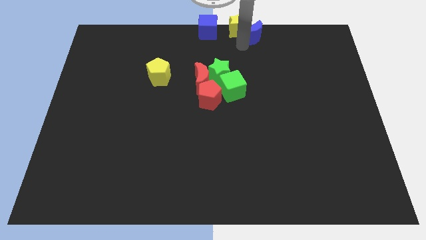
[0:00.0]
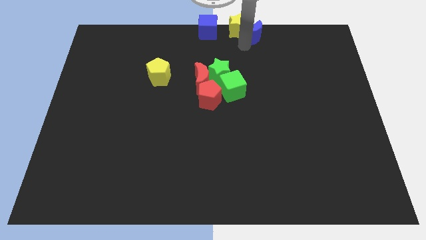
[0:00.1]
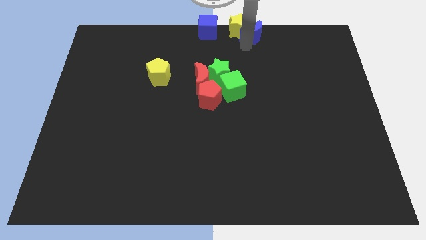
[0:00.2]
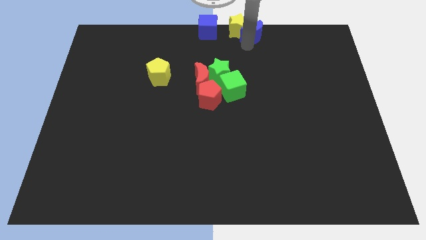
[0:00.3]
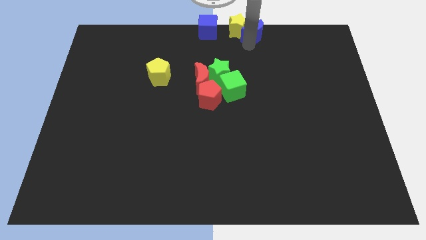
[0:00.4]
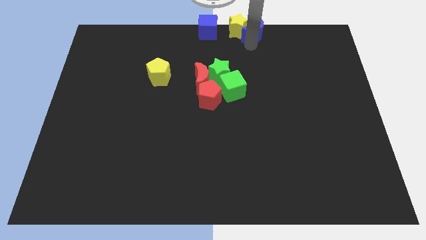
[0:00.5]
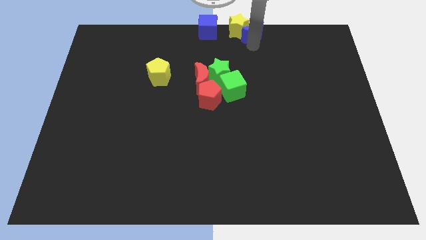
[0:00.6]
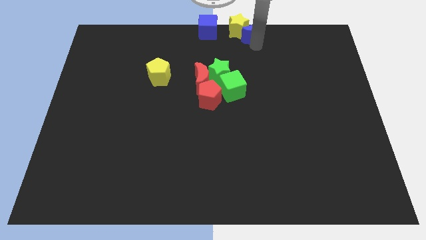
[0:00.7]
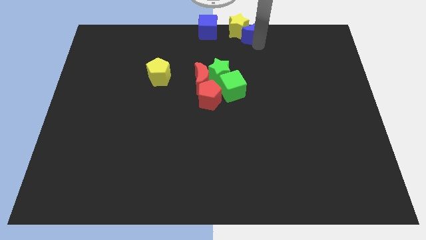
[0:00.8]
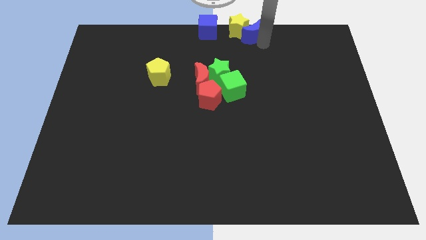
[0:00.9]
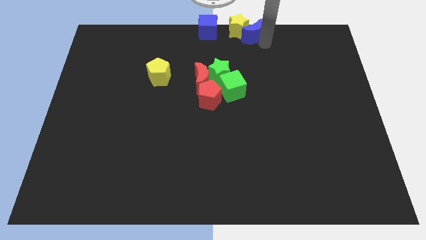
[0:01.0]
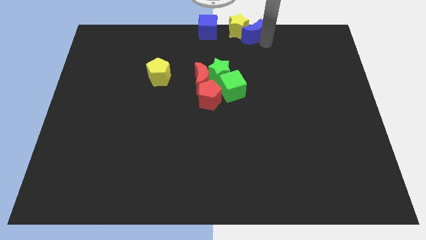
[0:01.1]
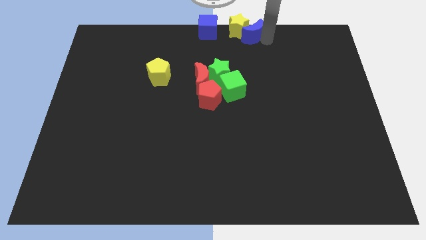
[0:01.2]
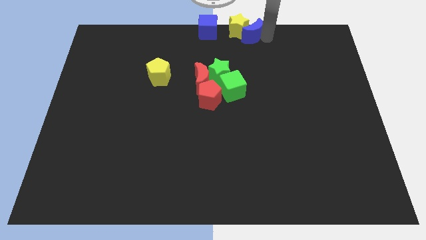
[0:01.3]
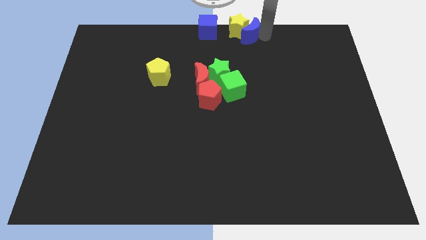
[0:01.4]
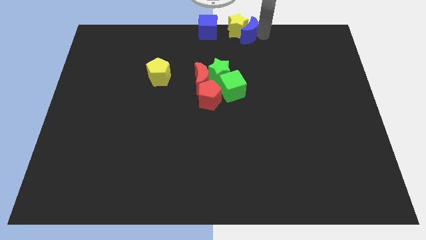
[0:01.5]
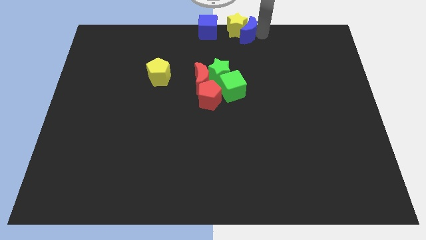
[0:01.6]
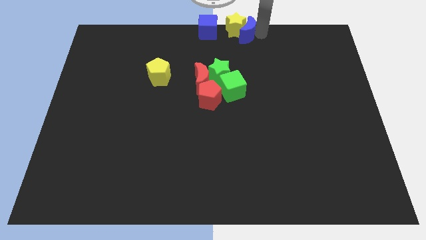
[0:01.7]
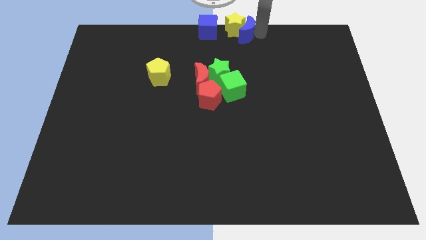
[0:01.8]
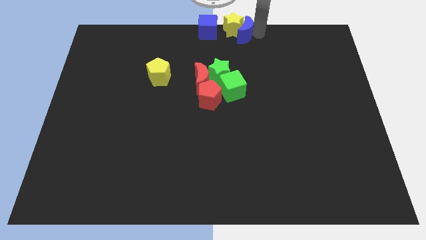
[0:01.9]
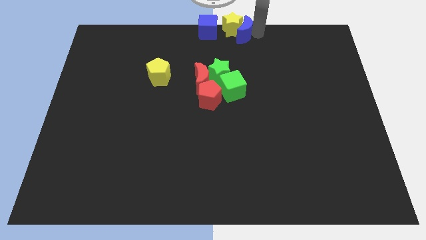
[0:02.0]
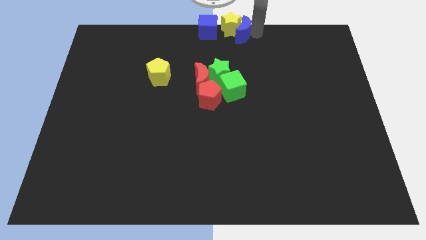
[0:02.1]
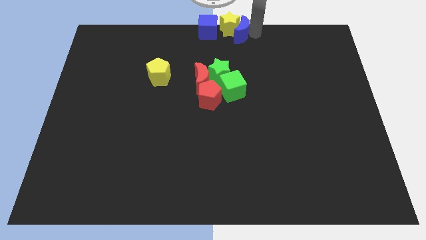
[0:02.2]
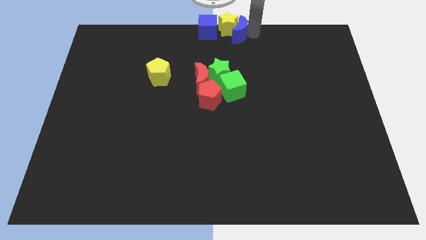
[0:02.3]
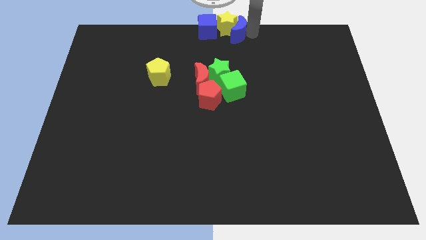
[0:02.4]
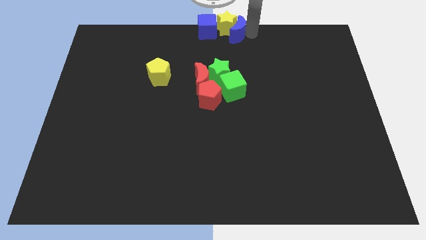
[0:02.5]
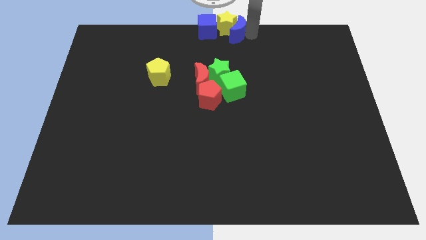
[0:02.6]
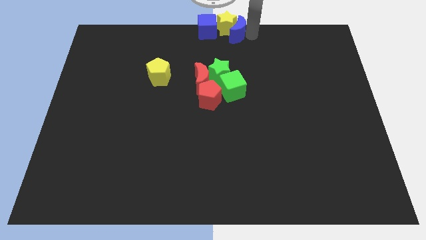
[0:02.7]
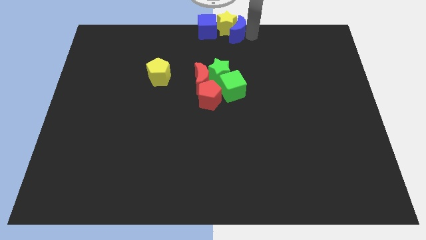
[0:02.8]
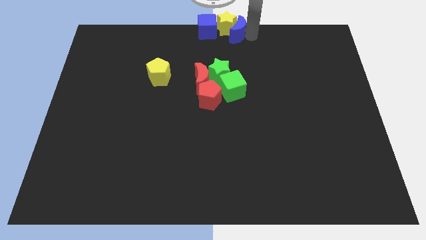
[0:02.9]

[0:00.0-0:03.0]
push the blue crescent into the yellow star from the right

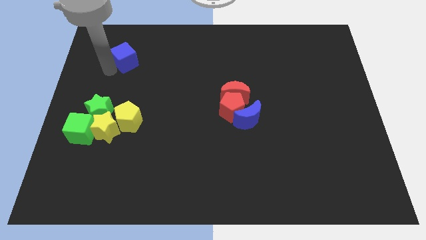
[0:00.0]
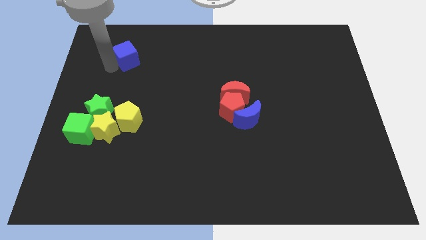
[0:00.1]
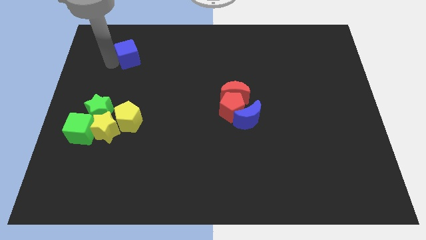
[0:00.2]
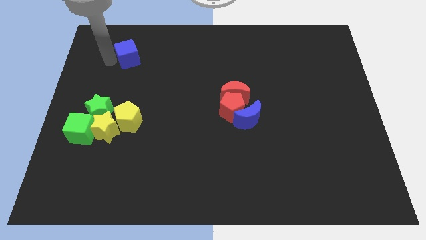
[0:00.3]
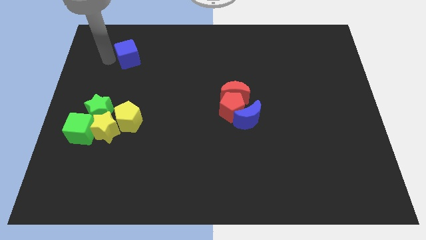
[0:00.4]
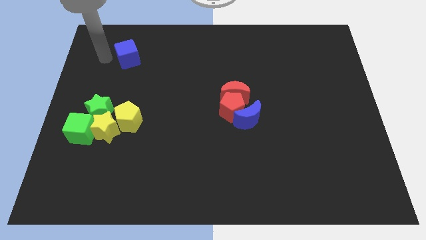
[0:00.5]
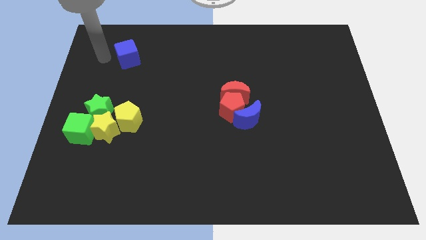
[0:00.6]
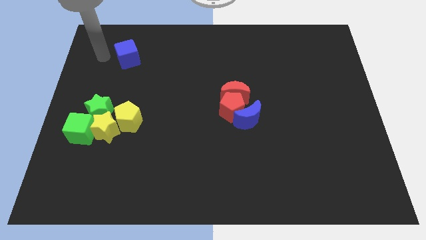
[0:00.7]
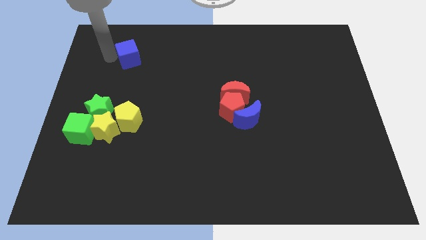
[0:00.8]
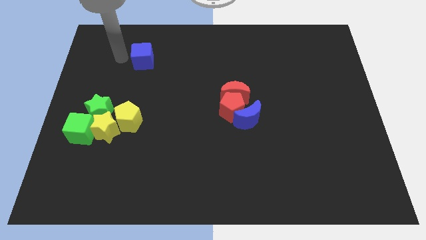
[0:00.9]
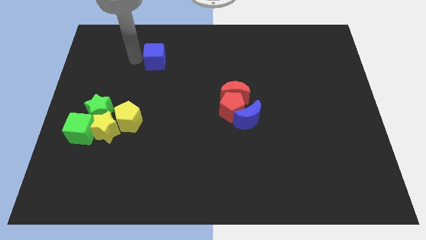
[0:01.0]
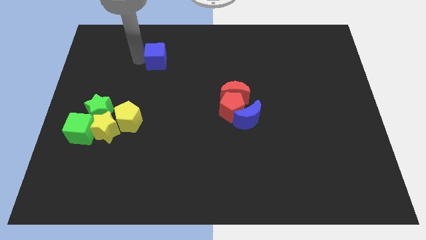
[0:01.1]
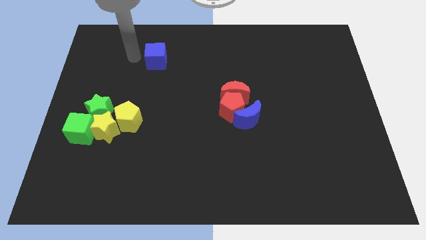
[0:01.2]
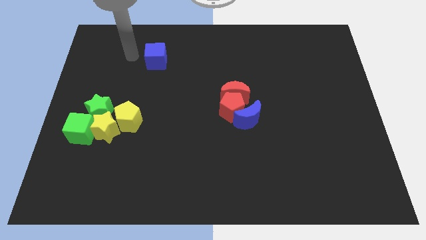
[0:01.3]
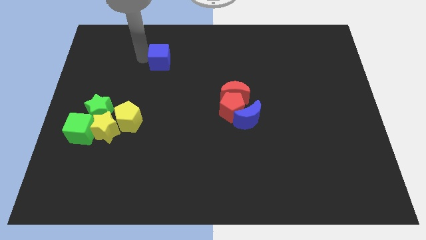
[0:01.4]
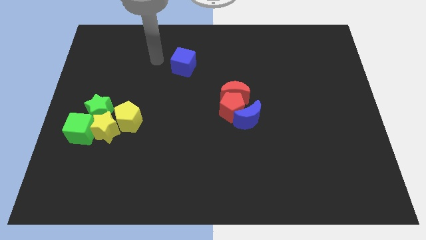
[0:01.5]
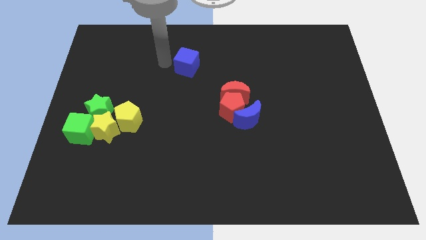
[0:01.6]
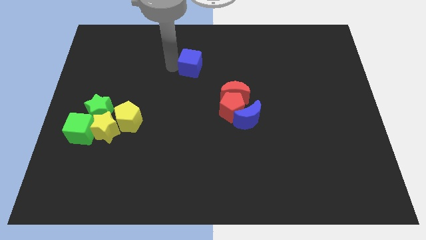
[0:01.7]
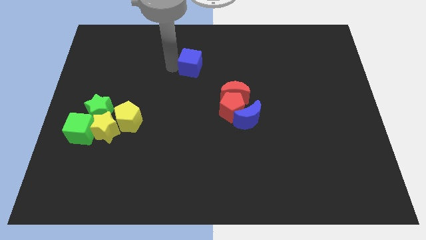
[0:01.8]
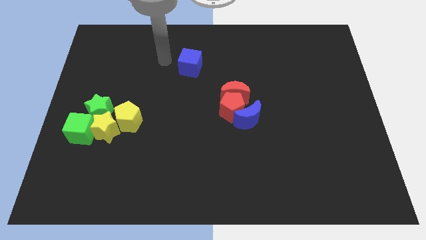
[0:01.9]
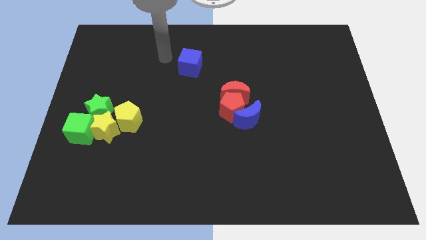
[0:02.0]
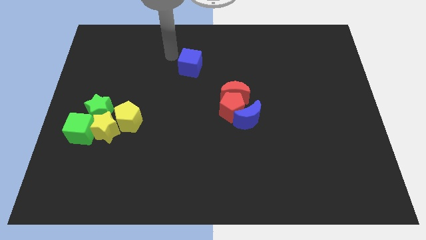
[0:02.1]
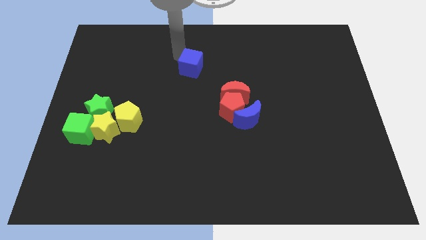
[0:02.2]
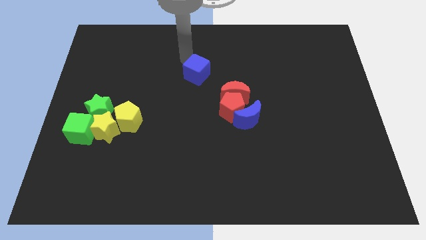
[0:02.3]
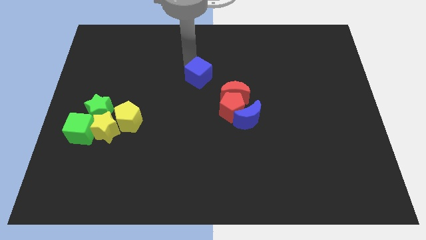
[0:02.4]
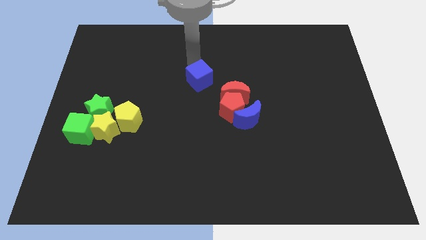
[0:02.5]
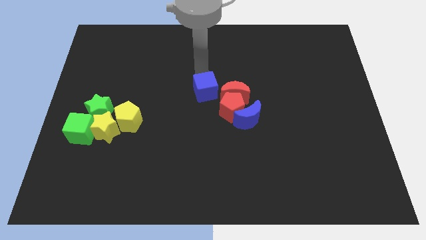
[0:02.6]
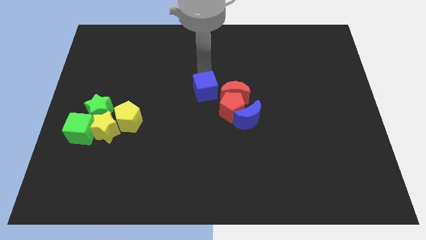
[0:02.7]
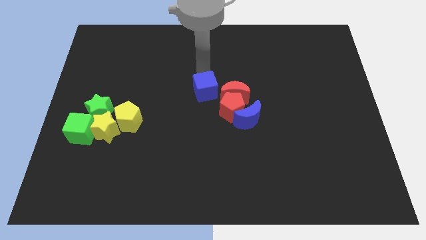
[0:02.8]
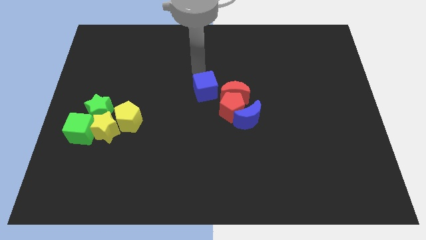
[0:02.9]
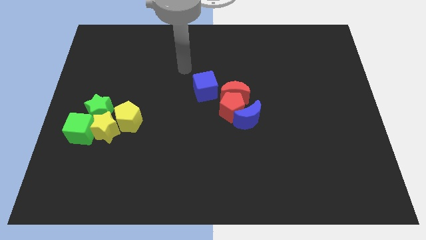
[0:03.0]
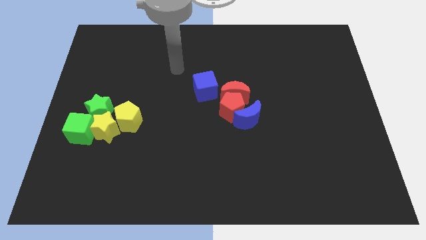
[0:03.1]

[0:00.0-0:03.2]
move the blue moon to the center

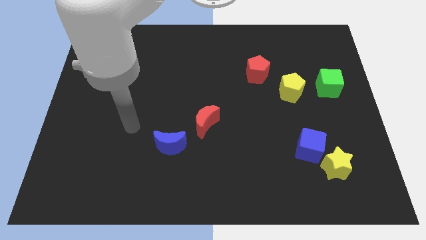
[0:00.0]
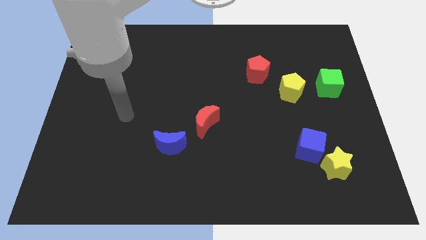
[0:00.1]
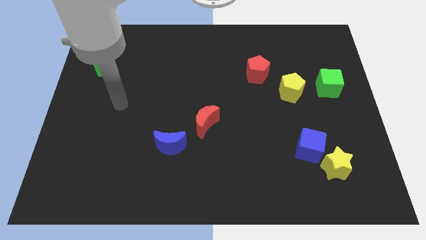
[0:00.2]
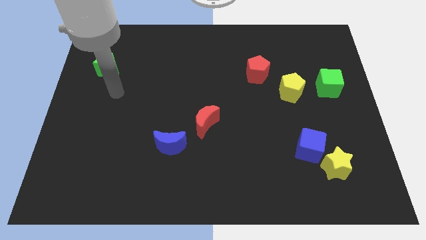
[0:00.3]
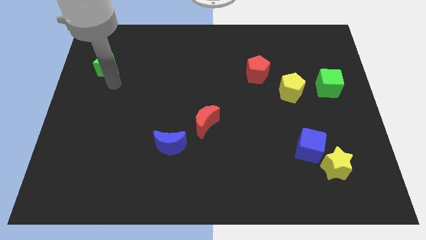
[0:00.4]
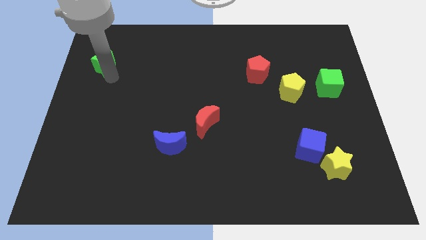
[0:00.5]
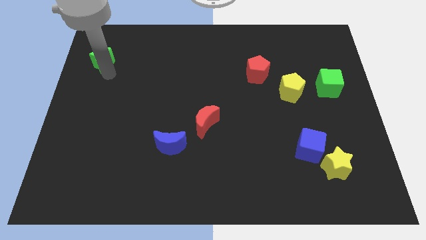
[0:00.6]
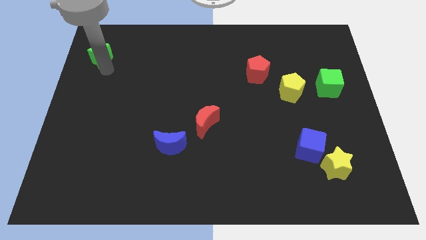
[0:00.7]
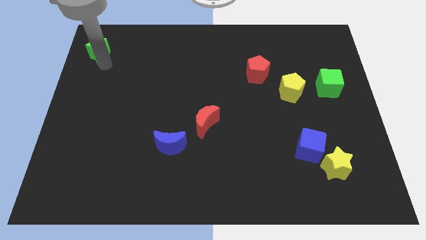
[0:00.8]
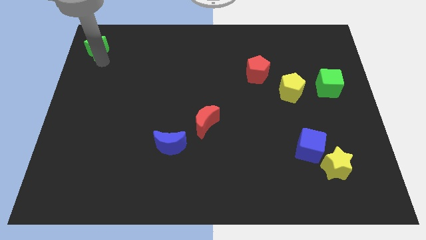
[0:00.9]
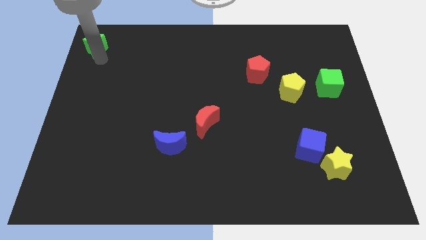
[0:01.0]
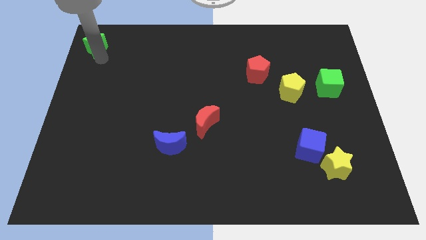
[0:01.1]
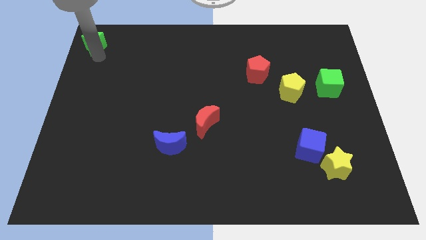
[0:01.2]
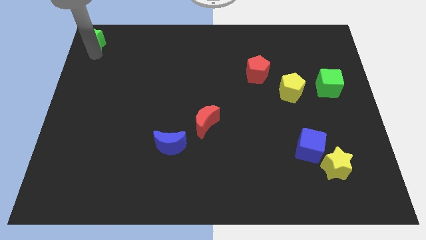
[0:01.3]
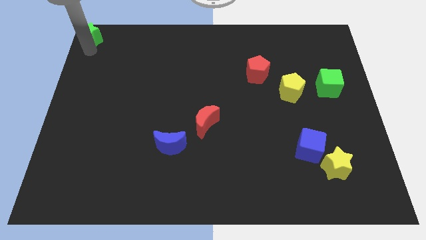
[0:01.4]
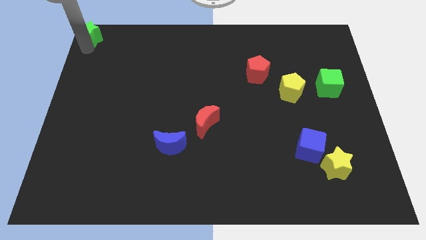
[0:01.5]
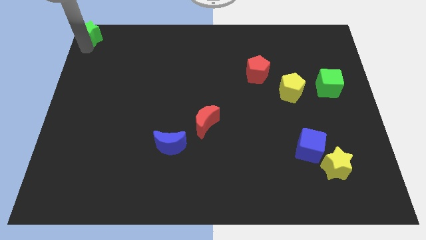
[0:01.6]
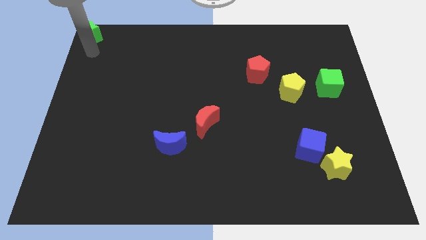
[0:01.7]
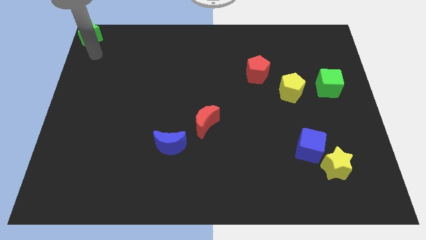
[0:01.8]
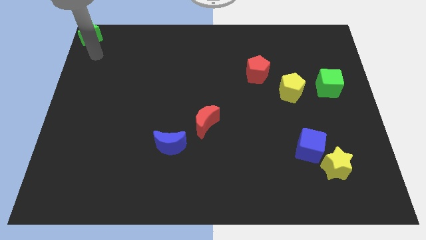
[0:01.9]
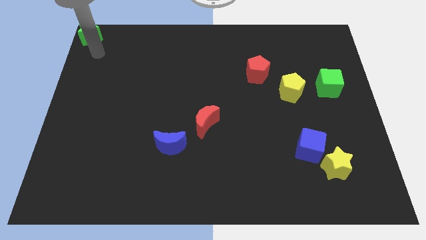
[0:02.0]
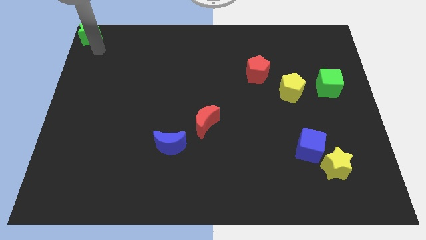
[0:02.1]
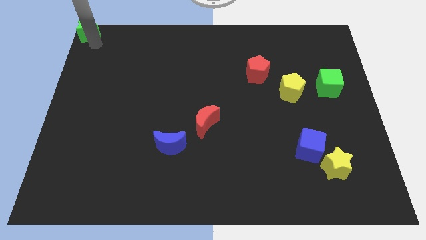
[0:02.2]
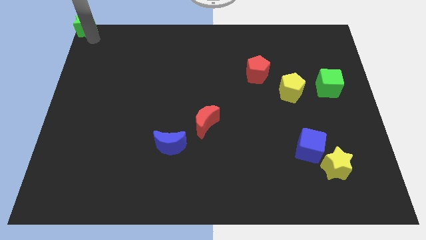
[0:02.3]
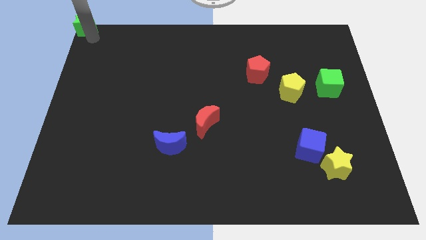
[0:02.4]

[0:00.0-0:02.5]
push green star to the top left corner

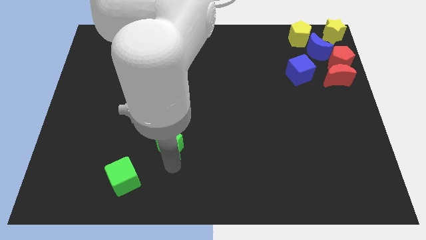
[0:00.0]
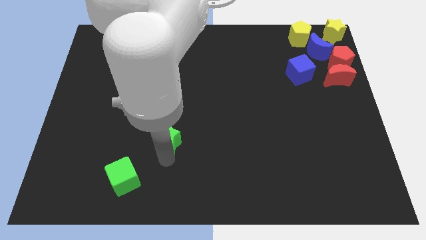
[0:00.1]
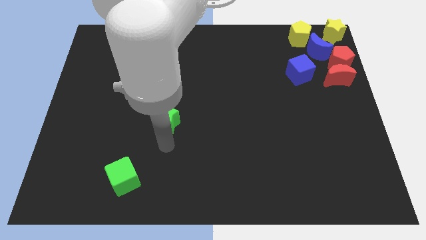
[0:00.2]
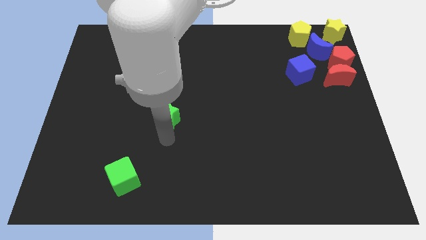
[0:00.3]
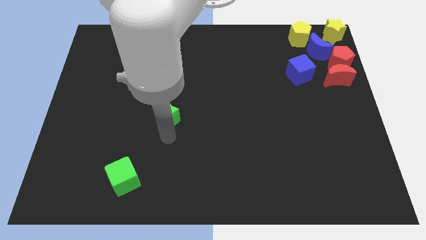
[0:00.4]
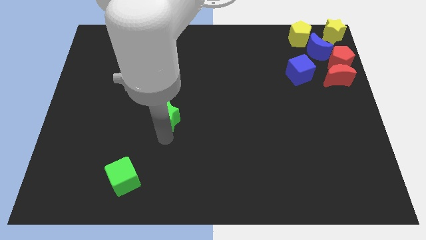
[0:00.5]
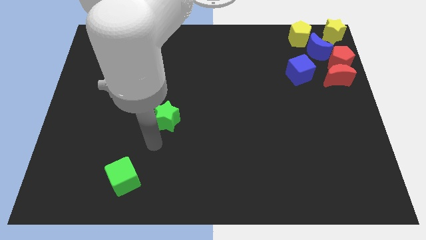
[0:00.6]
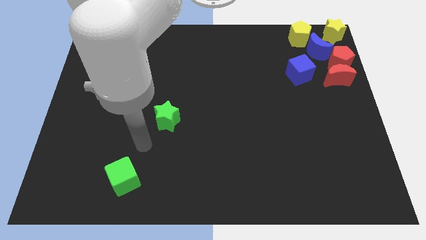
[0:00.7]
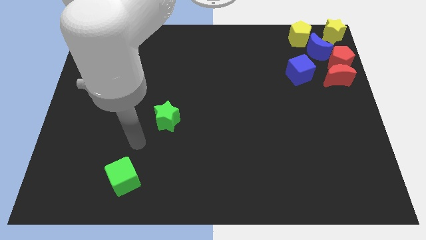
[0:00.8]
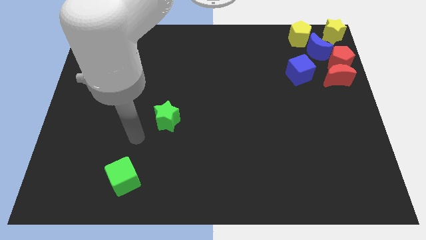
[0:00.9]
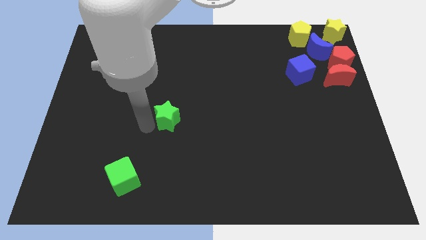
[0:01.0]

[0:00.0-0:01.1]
drag the green star upwards
